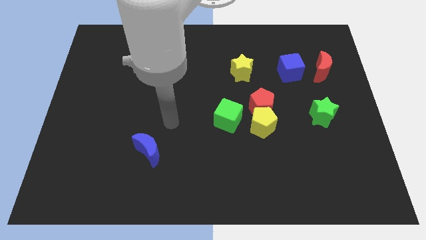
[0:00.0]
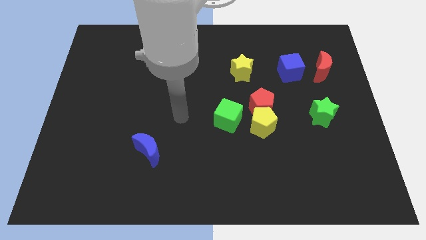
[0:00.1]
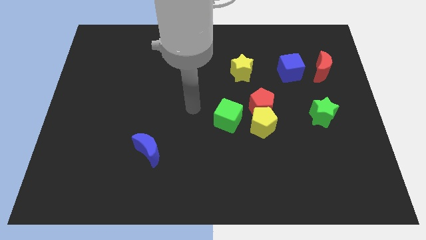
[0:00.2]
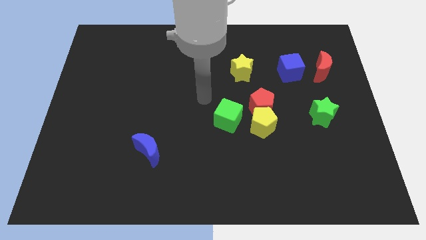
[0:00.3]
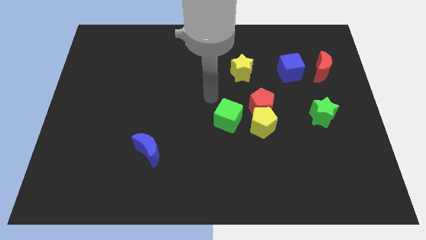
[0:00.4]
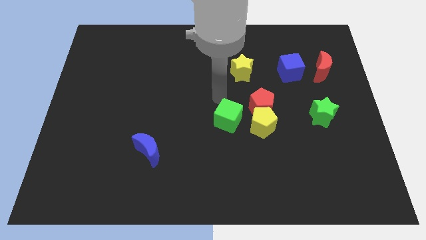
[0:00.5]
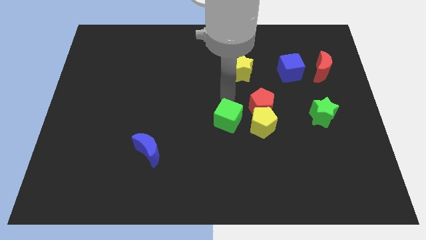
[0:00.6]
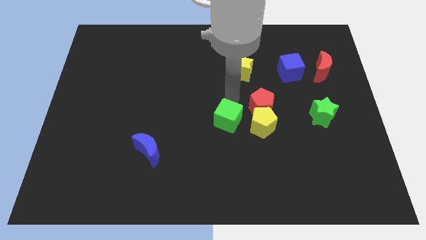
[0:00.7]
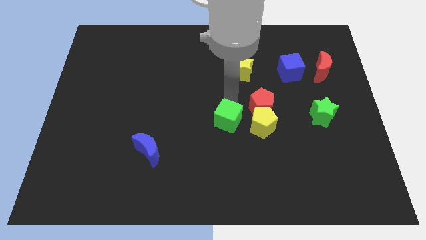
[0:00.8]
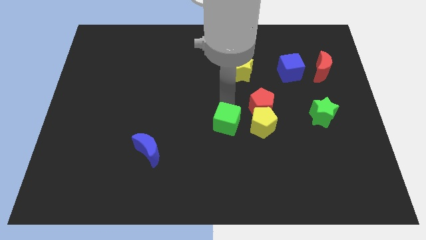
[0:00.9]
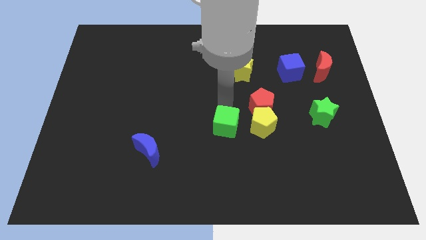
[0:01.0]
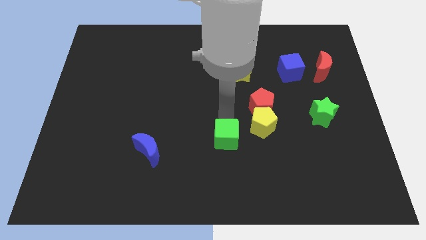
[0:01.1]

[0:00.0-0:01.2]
push green cube towards the bottom of the board

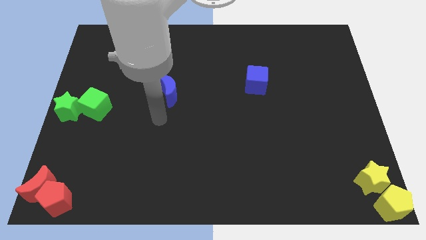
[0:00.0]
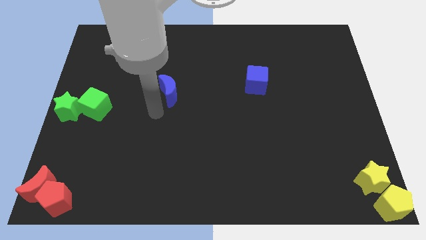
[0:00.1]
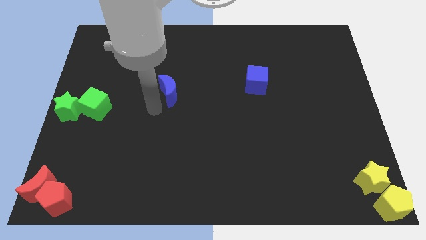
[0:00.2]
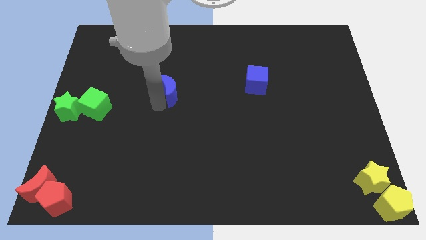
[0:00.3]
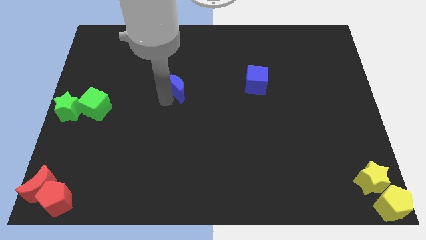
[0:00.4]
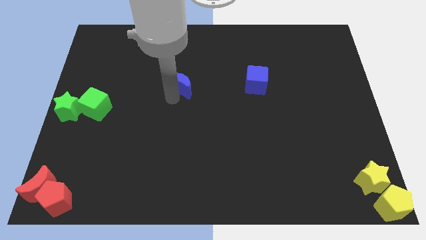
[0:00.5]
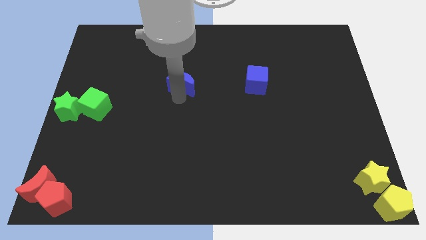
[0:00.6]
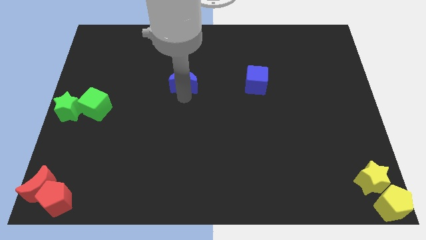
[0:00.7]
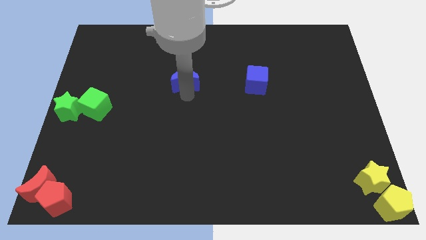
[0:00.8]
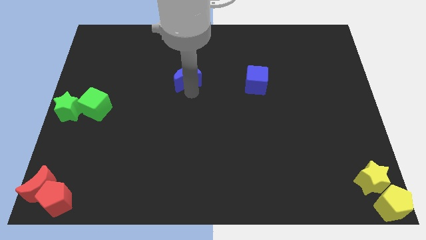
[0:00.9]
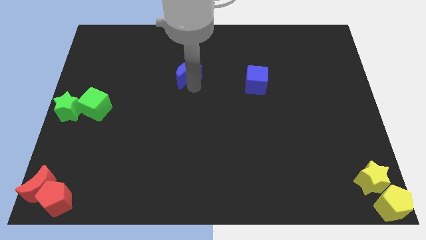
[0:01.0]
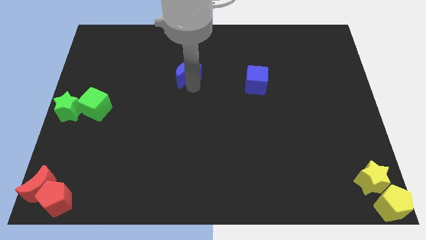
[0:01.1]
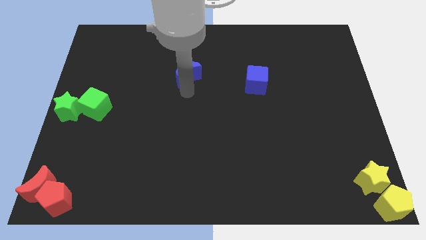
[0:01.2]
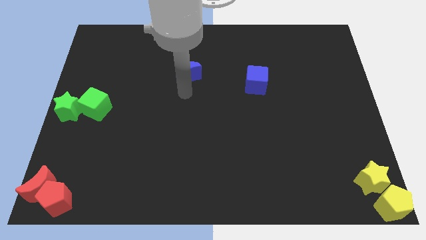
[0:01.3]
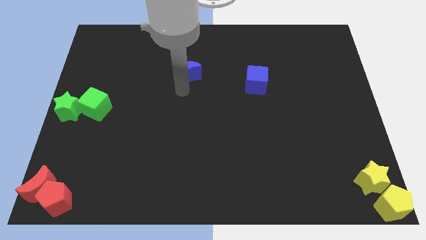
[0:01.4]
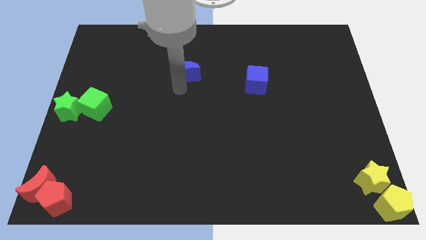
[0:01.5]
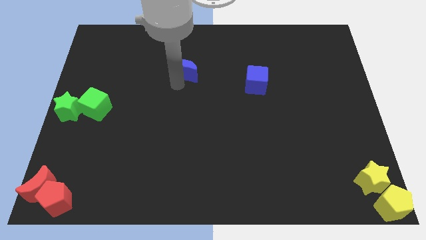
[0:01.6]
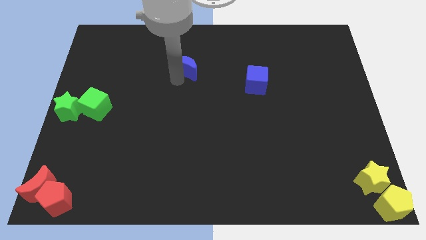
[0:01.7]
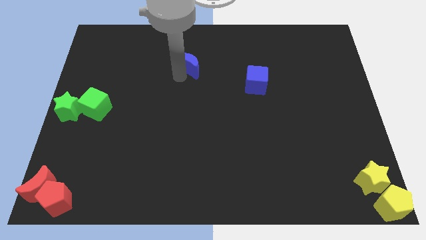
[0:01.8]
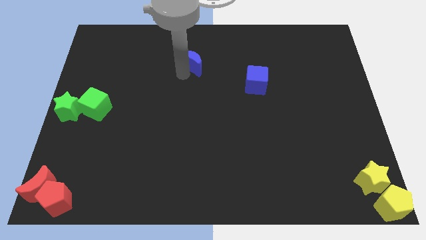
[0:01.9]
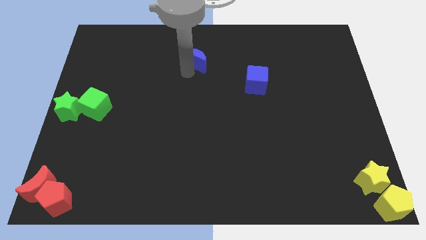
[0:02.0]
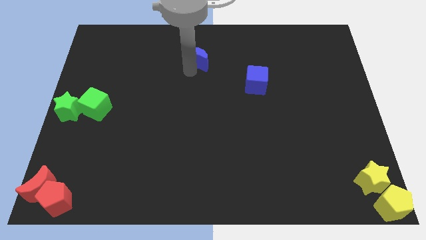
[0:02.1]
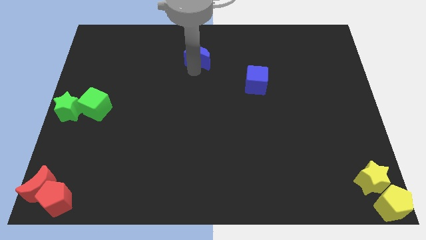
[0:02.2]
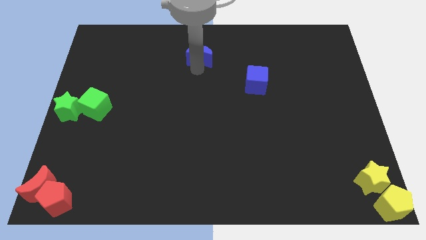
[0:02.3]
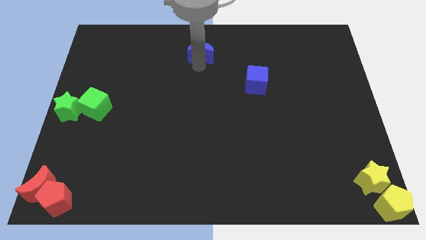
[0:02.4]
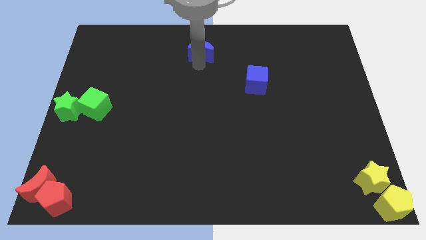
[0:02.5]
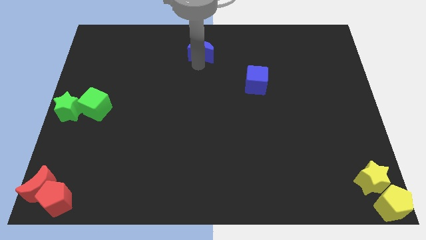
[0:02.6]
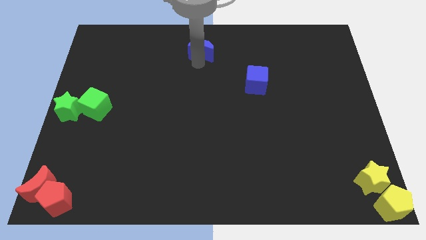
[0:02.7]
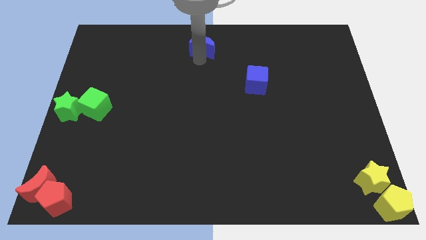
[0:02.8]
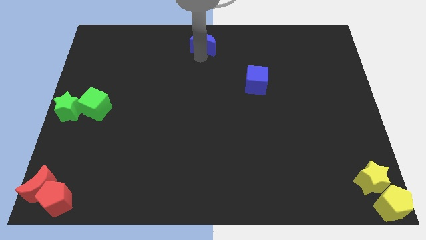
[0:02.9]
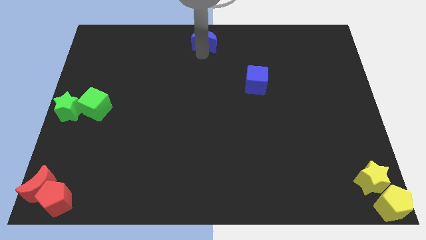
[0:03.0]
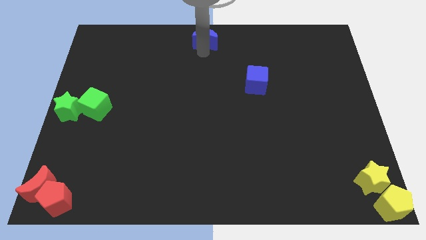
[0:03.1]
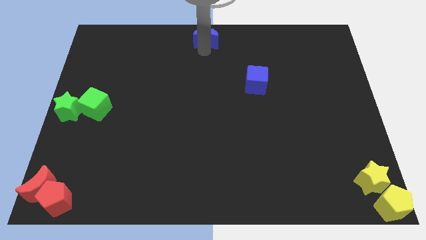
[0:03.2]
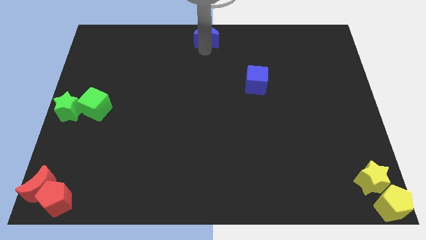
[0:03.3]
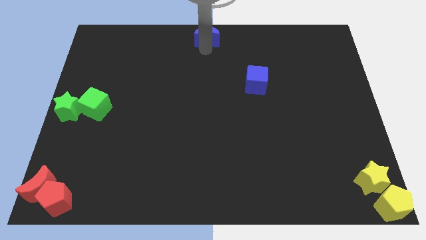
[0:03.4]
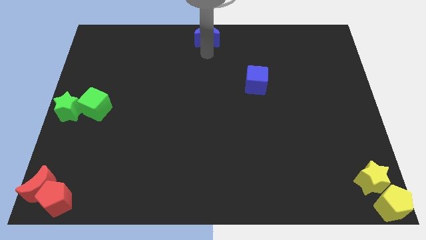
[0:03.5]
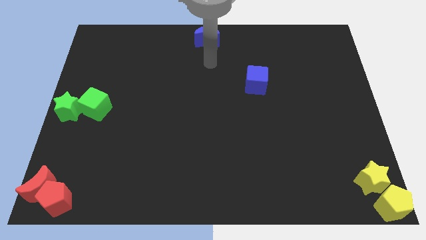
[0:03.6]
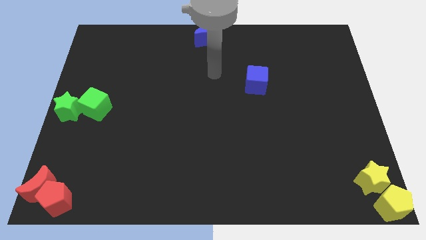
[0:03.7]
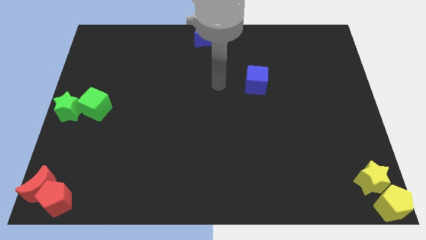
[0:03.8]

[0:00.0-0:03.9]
move the blue moon to the top center of the board

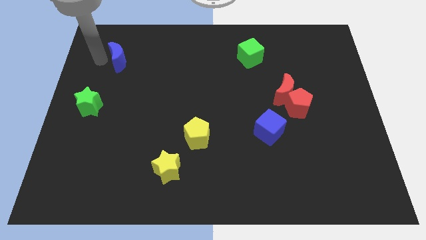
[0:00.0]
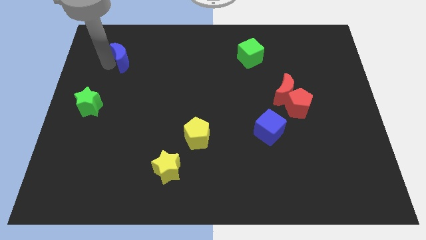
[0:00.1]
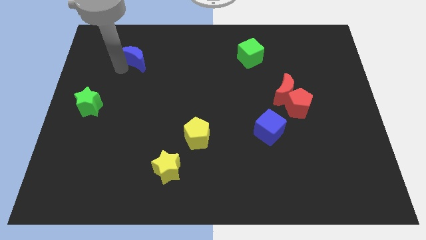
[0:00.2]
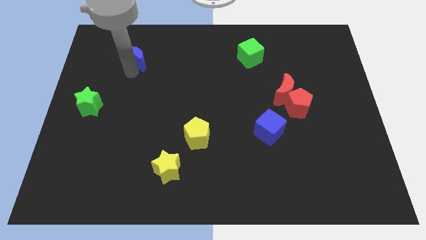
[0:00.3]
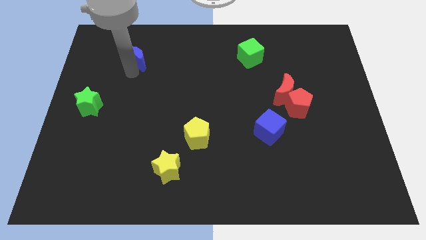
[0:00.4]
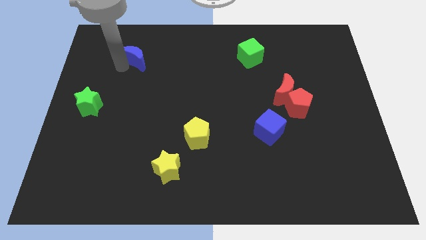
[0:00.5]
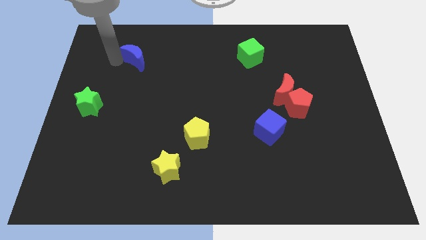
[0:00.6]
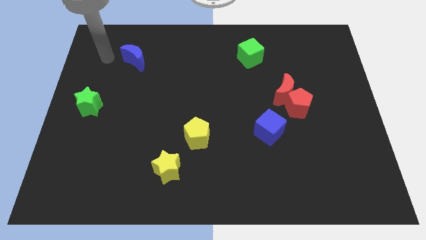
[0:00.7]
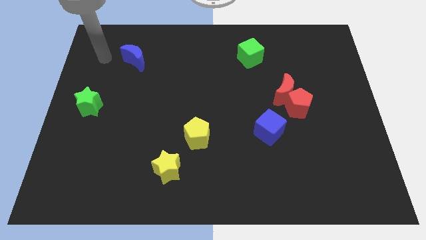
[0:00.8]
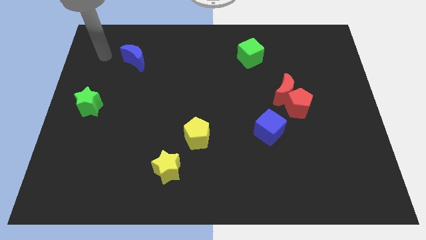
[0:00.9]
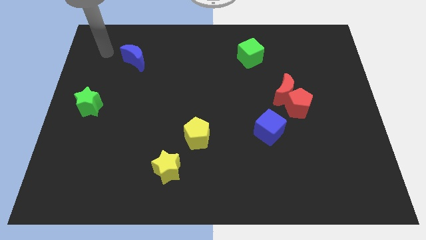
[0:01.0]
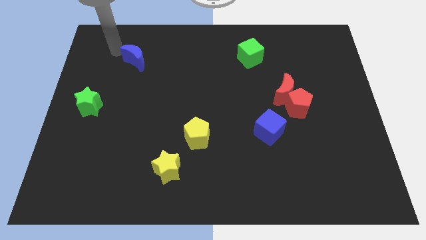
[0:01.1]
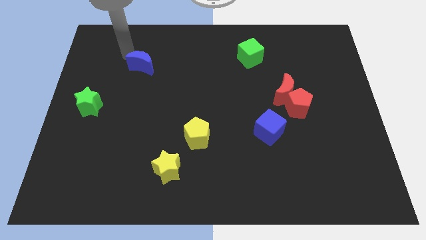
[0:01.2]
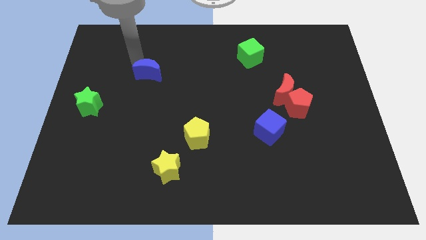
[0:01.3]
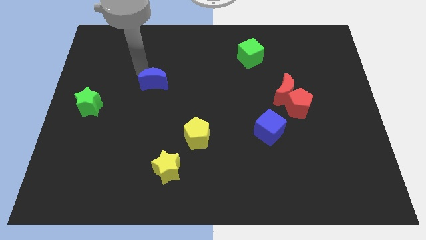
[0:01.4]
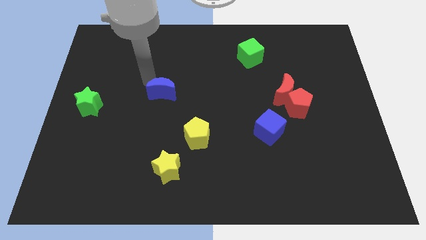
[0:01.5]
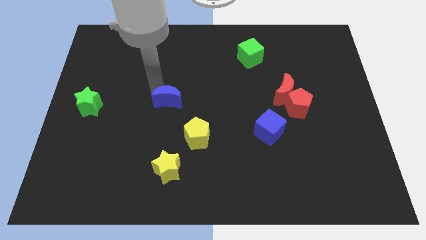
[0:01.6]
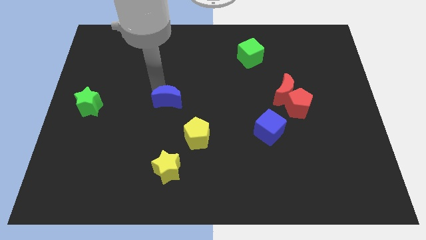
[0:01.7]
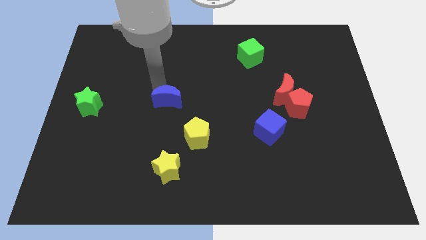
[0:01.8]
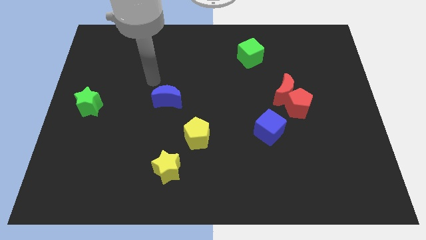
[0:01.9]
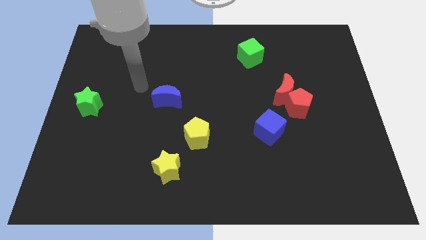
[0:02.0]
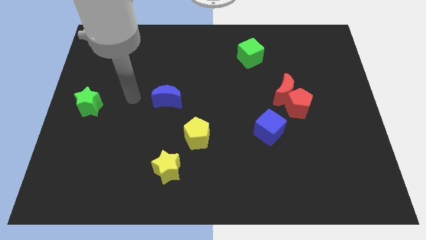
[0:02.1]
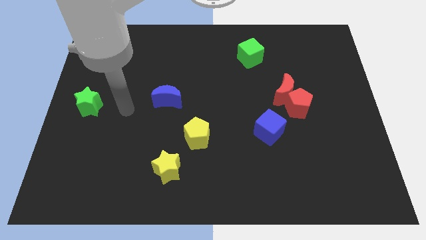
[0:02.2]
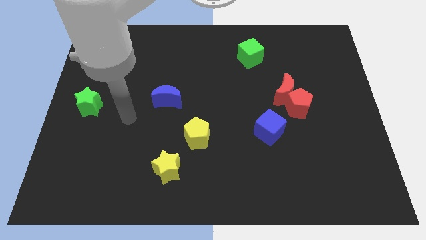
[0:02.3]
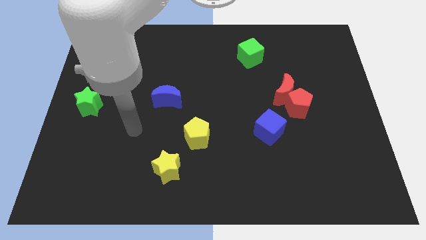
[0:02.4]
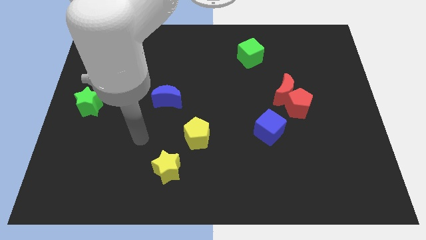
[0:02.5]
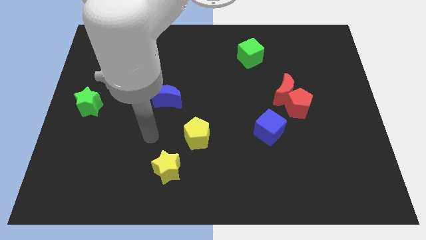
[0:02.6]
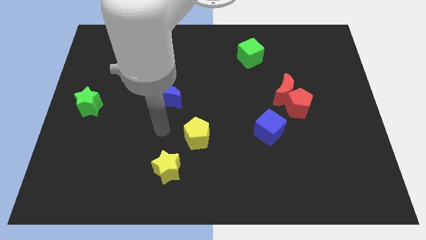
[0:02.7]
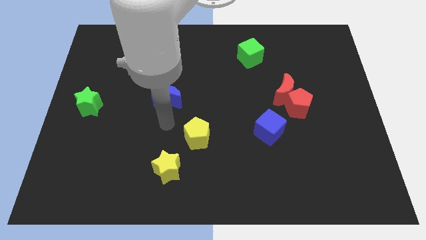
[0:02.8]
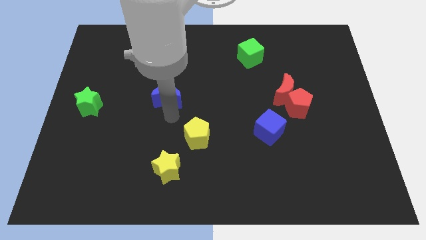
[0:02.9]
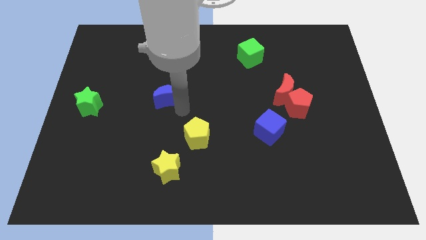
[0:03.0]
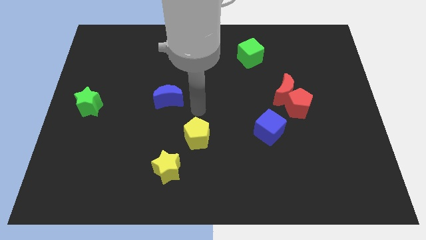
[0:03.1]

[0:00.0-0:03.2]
place the blue crescent to the right of green star

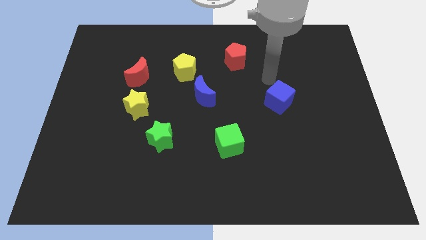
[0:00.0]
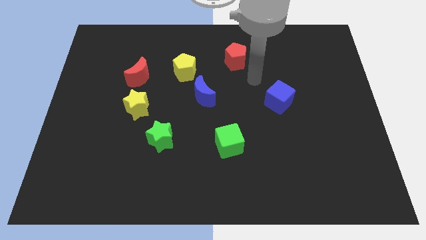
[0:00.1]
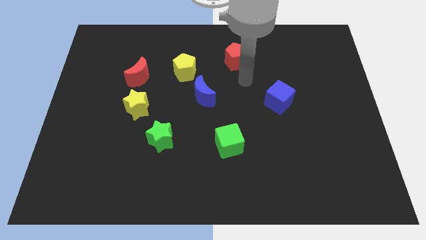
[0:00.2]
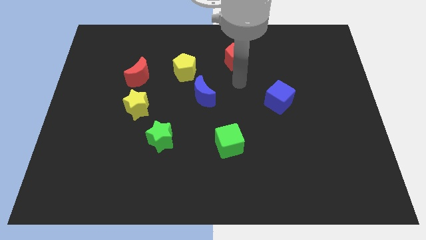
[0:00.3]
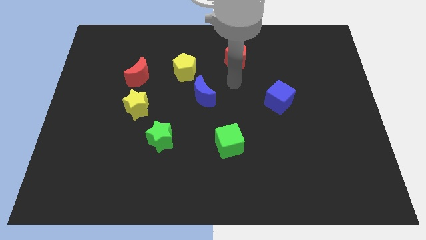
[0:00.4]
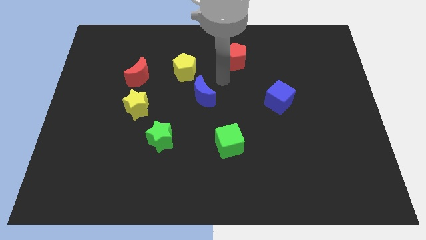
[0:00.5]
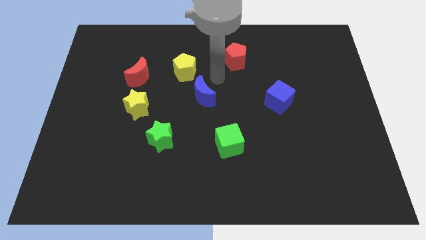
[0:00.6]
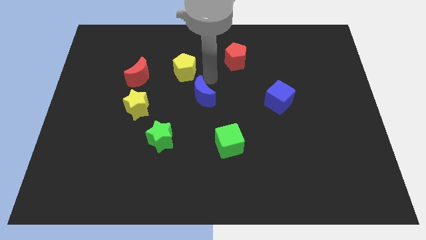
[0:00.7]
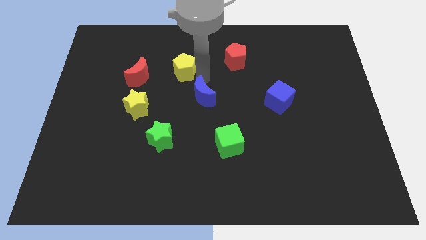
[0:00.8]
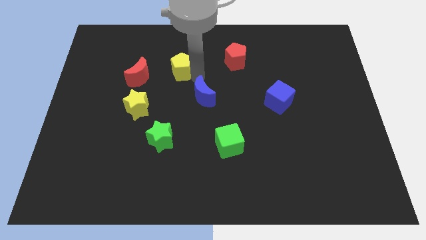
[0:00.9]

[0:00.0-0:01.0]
move the arm to the yellow penatgon
